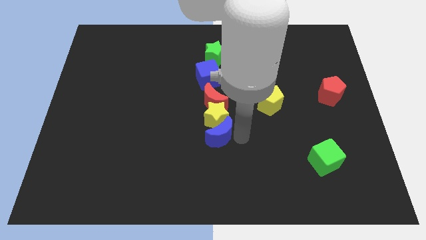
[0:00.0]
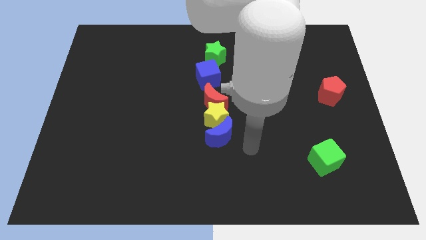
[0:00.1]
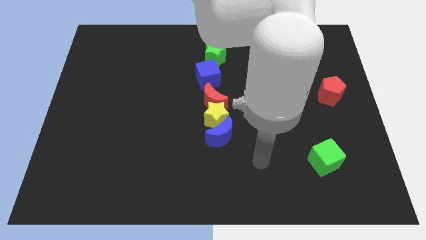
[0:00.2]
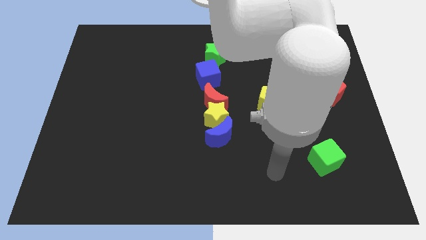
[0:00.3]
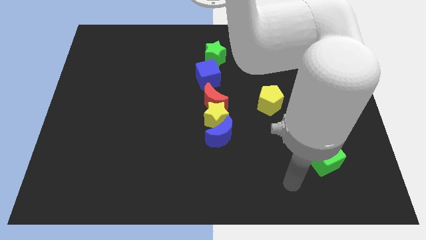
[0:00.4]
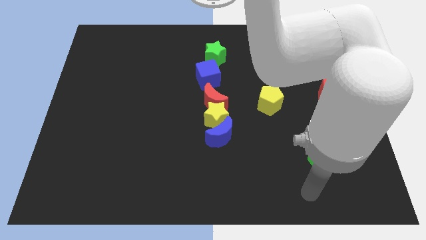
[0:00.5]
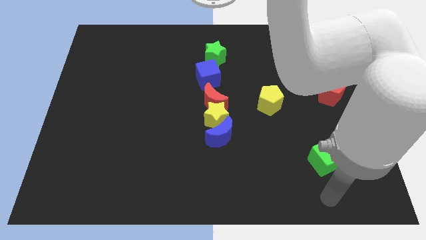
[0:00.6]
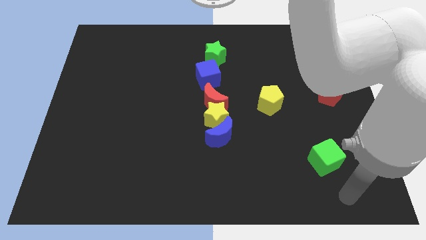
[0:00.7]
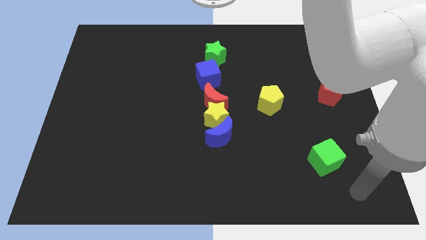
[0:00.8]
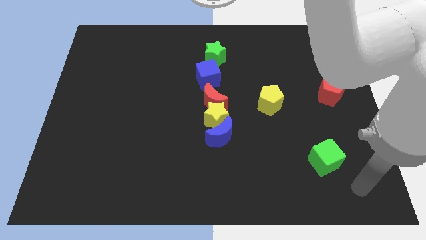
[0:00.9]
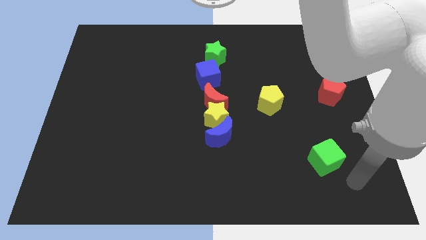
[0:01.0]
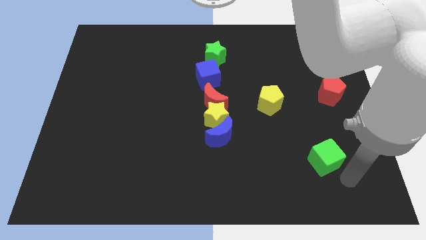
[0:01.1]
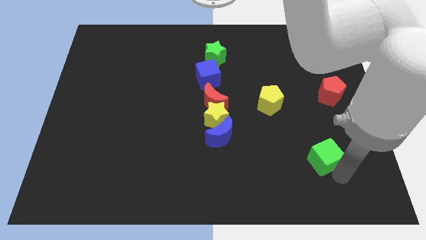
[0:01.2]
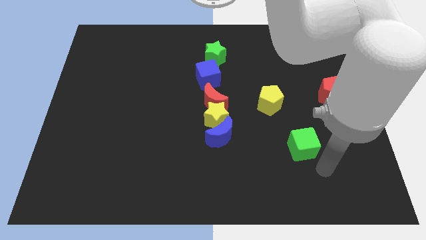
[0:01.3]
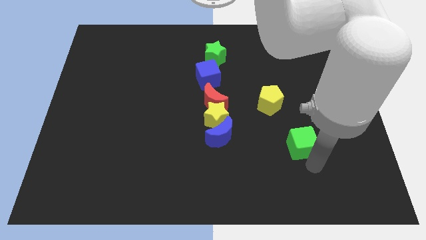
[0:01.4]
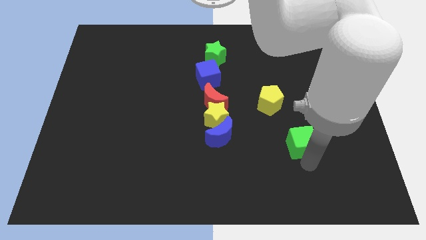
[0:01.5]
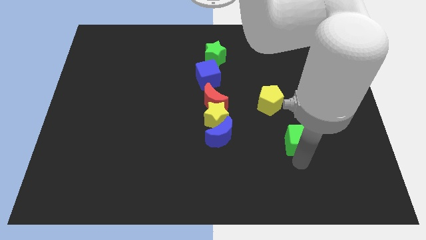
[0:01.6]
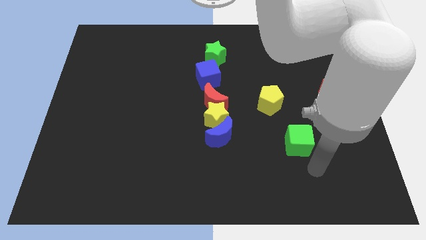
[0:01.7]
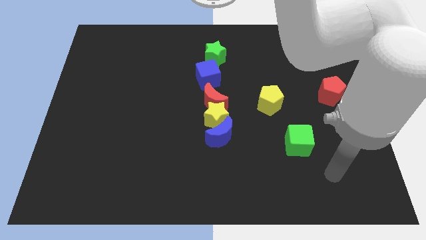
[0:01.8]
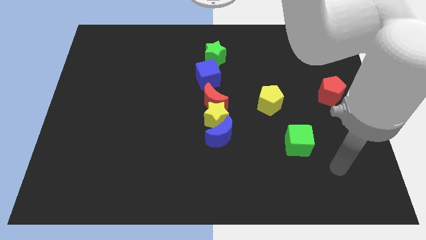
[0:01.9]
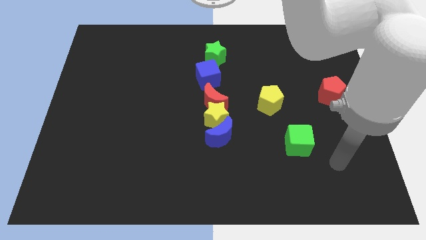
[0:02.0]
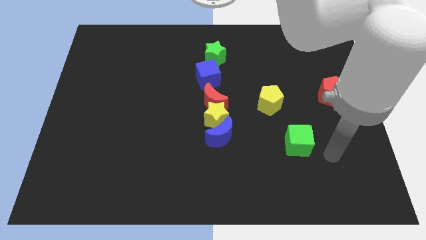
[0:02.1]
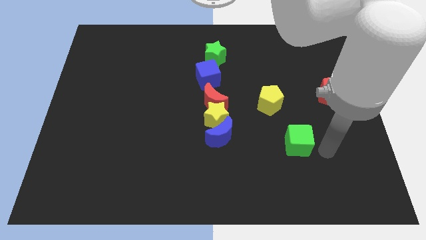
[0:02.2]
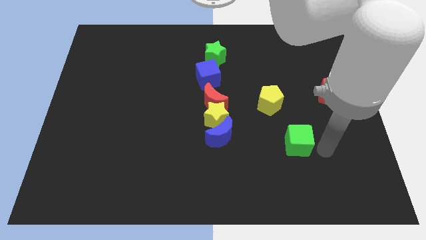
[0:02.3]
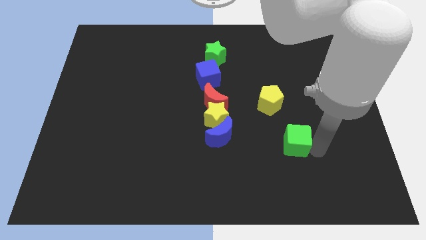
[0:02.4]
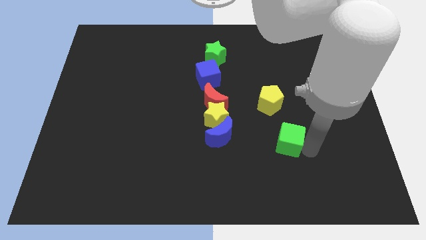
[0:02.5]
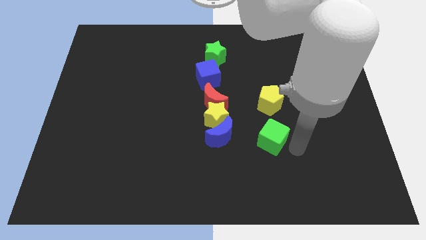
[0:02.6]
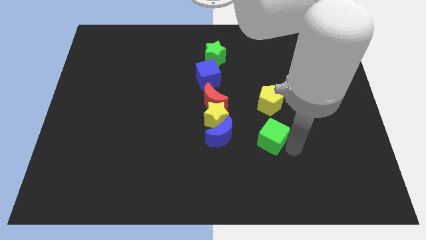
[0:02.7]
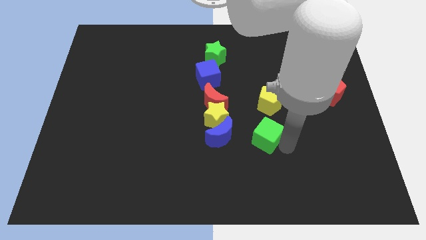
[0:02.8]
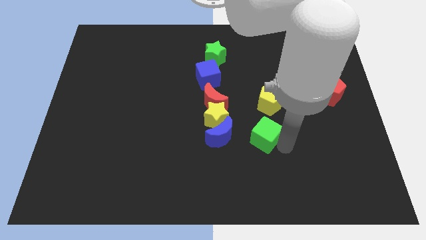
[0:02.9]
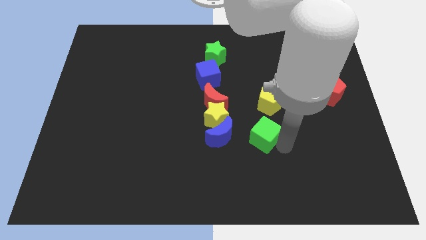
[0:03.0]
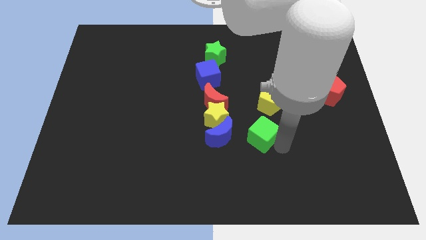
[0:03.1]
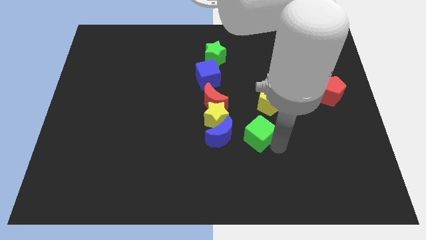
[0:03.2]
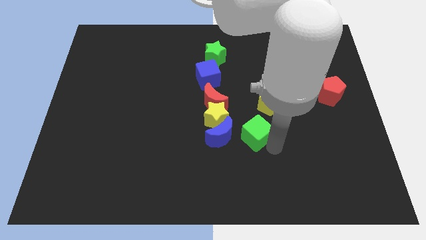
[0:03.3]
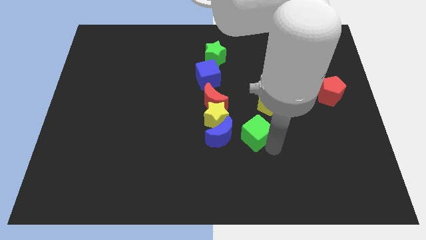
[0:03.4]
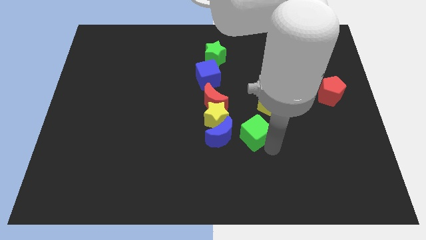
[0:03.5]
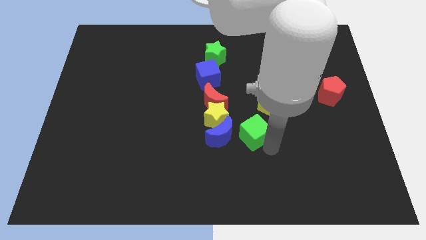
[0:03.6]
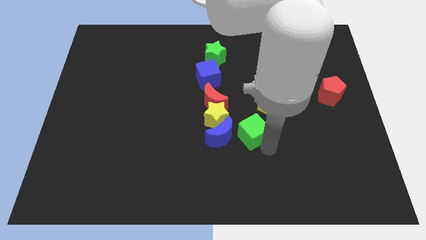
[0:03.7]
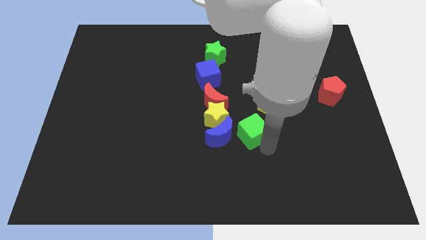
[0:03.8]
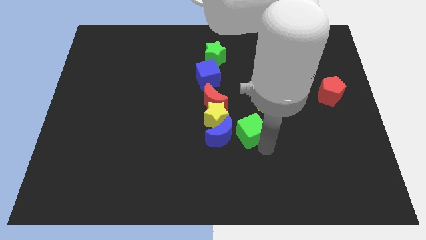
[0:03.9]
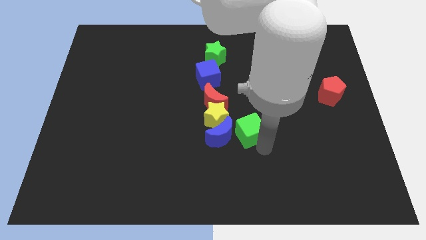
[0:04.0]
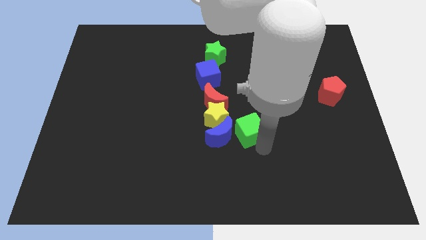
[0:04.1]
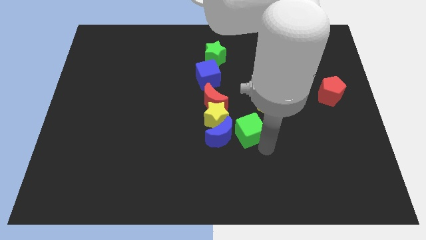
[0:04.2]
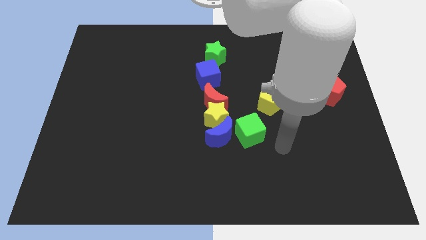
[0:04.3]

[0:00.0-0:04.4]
push the green cube to the right side of the blue crescent

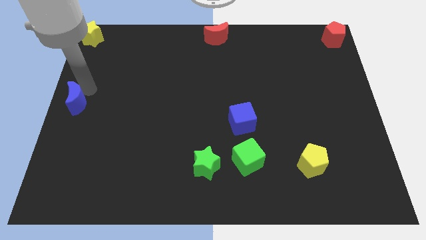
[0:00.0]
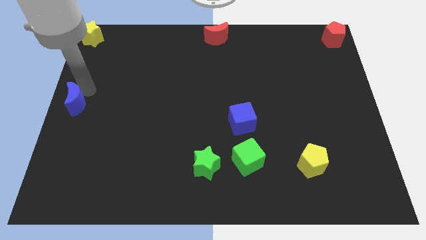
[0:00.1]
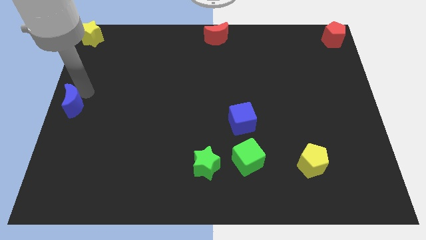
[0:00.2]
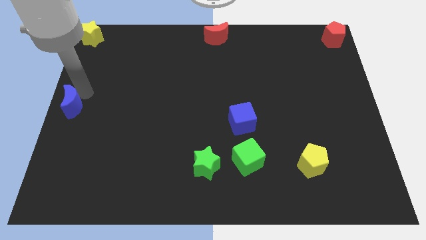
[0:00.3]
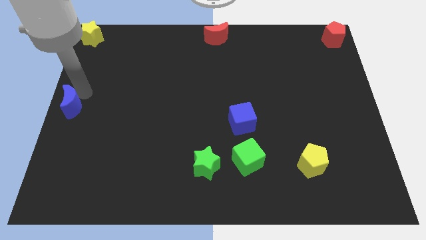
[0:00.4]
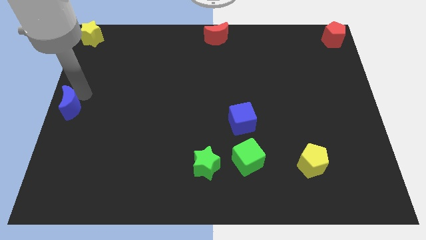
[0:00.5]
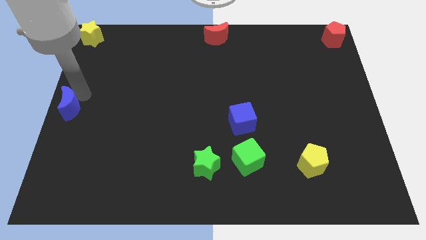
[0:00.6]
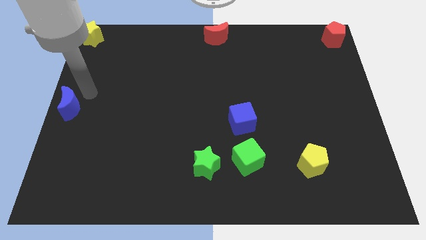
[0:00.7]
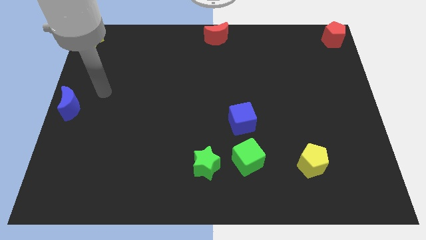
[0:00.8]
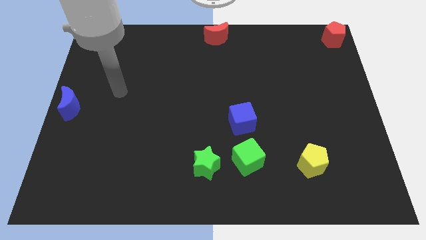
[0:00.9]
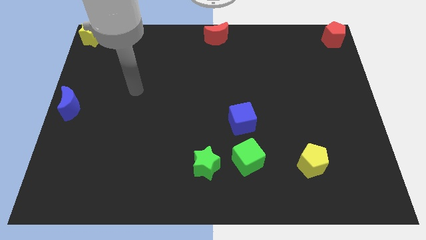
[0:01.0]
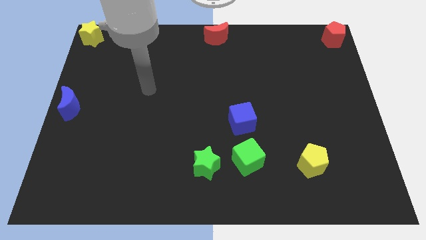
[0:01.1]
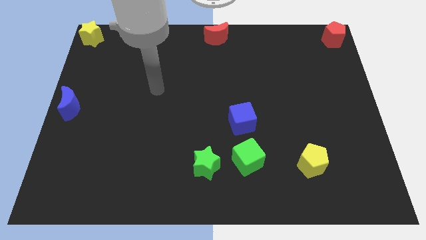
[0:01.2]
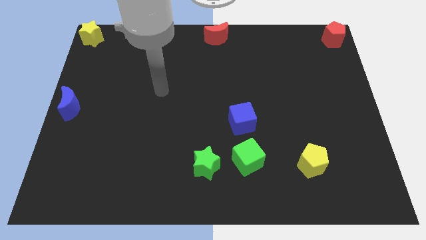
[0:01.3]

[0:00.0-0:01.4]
push the blue crescent towards the left center of the board

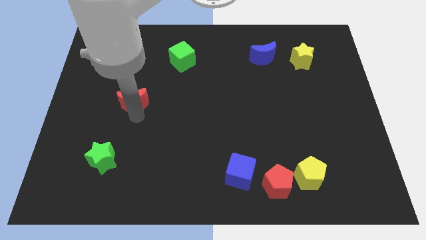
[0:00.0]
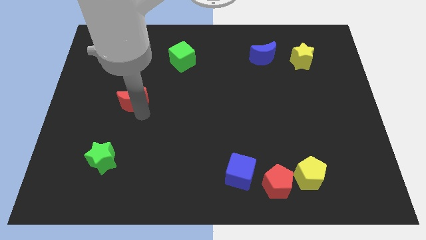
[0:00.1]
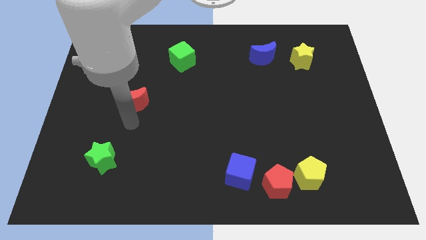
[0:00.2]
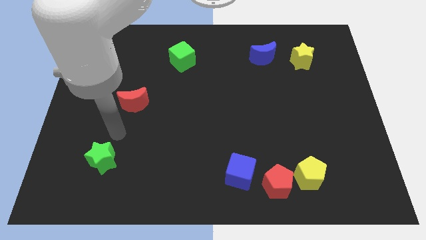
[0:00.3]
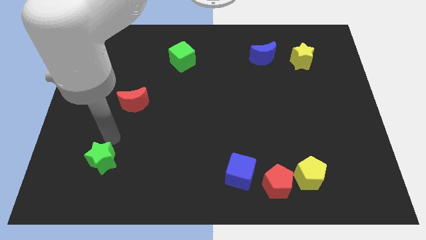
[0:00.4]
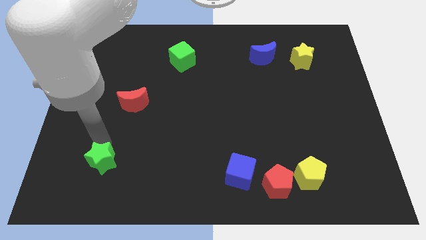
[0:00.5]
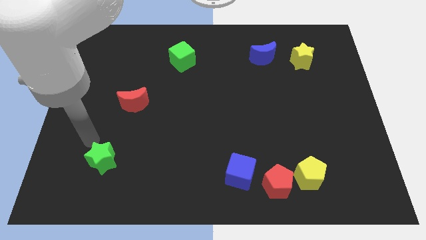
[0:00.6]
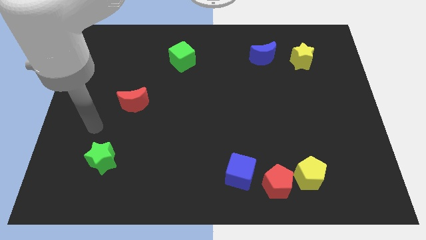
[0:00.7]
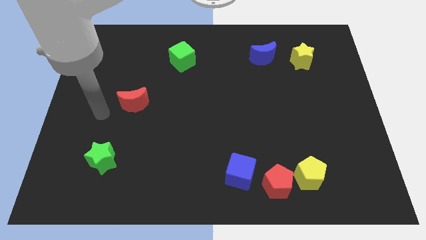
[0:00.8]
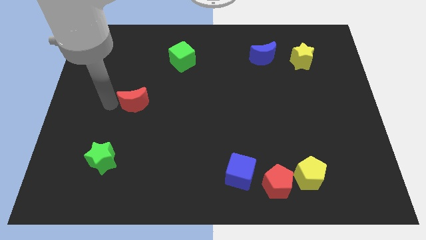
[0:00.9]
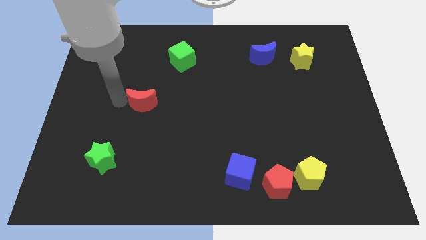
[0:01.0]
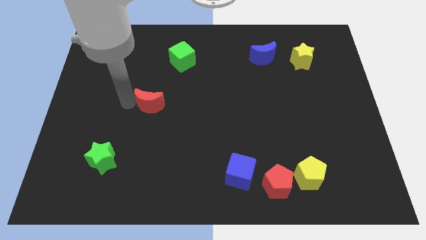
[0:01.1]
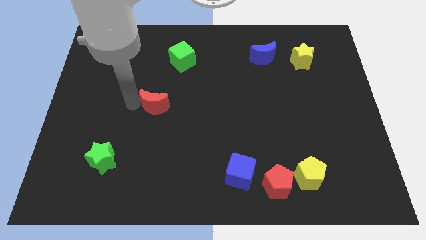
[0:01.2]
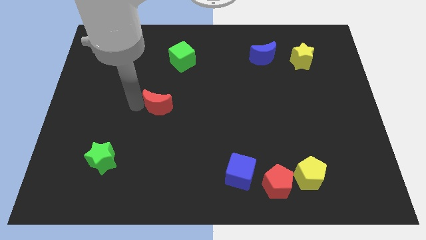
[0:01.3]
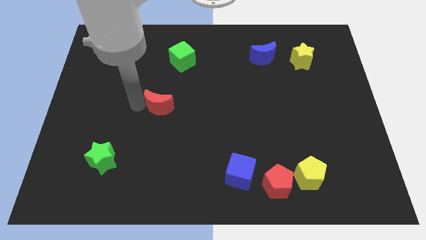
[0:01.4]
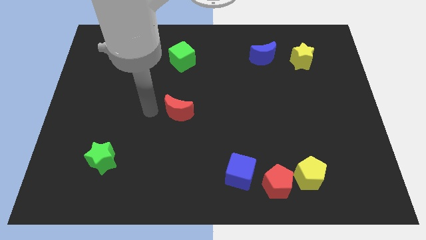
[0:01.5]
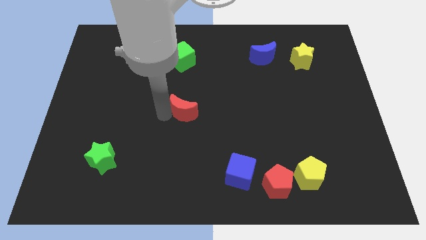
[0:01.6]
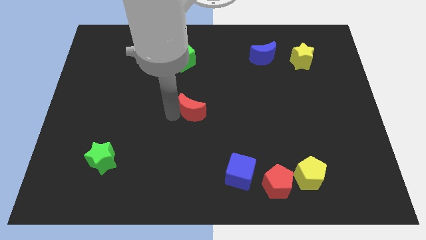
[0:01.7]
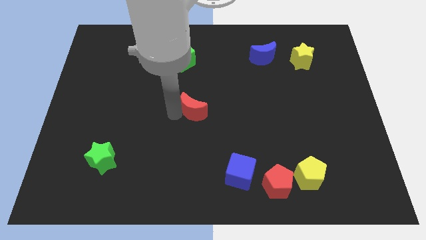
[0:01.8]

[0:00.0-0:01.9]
place the red moon underneath the green cube

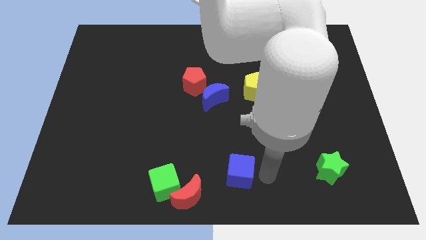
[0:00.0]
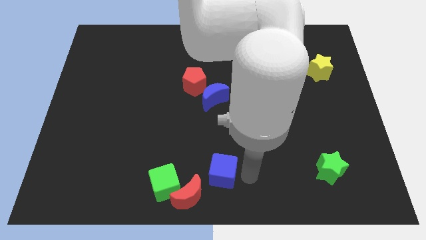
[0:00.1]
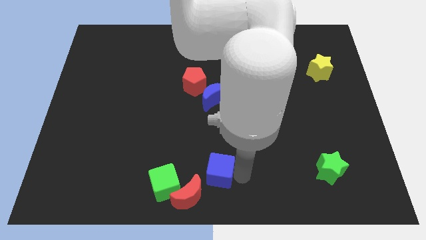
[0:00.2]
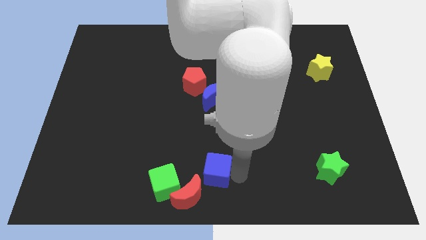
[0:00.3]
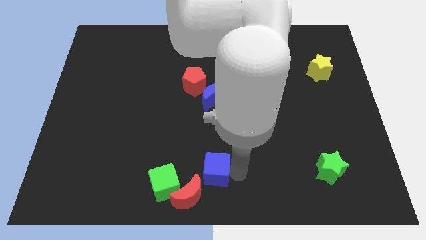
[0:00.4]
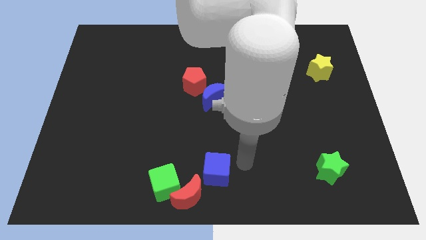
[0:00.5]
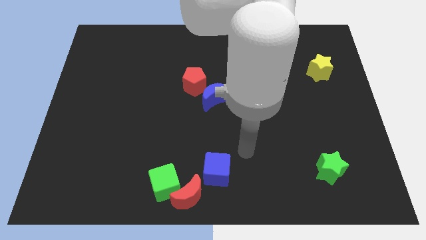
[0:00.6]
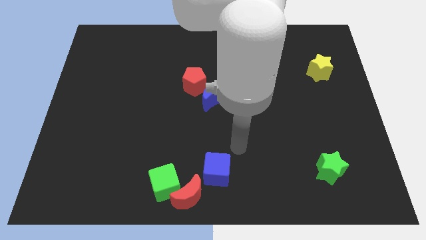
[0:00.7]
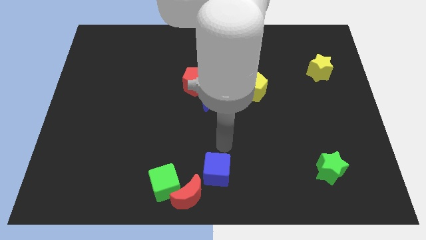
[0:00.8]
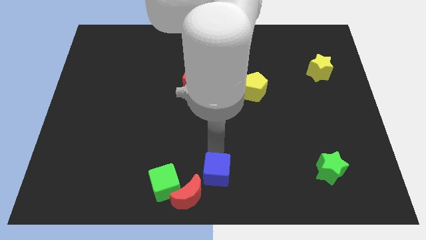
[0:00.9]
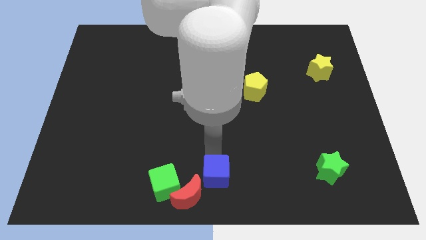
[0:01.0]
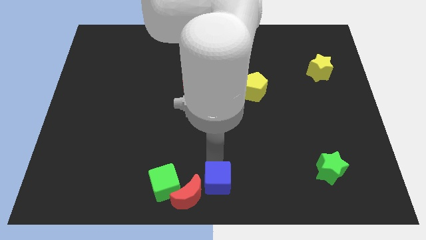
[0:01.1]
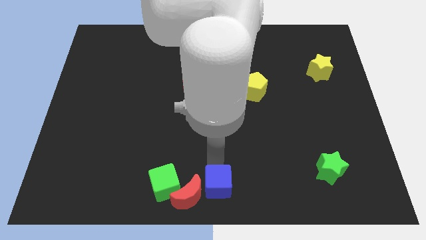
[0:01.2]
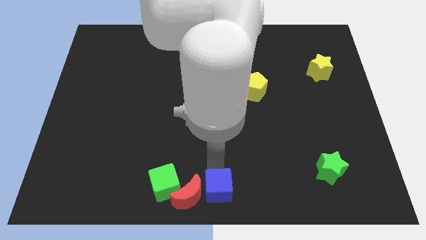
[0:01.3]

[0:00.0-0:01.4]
push the blue cube to the right of the red crescent
